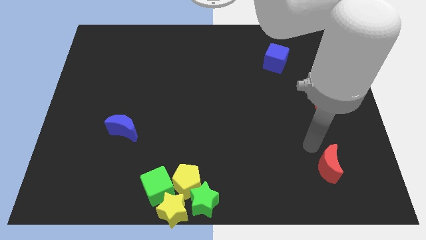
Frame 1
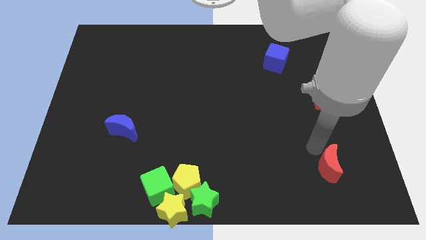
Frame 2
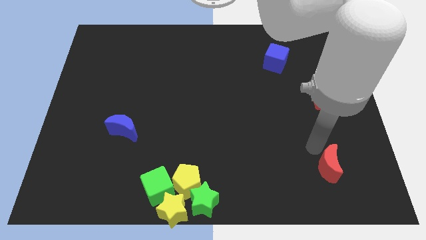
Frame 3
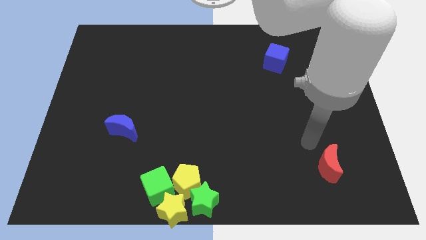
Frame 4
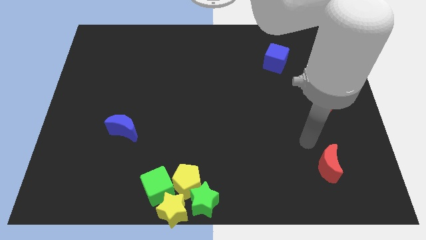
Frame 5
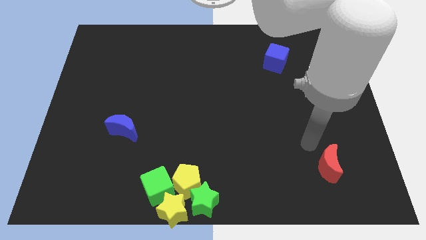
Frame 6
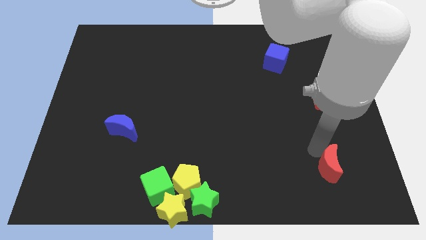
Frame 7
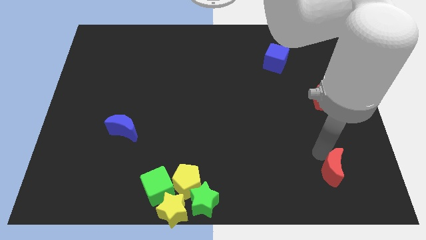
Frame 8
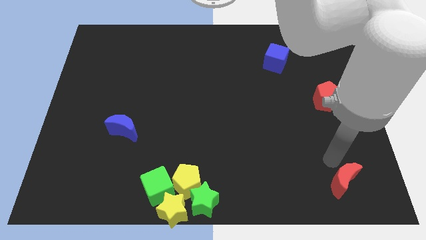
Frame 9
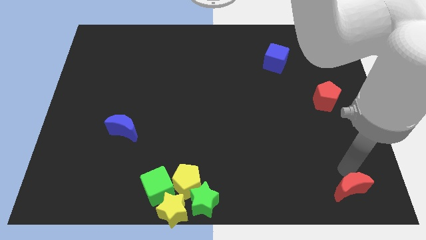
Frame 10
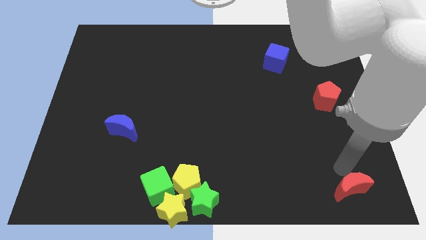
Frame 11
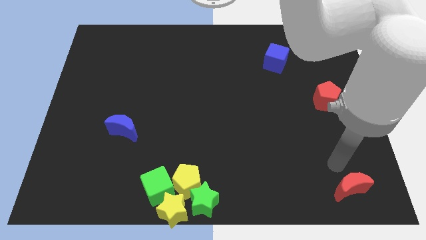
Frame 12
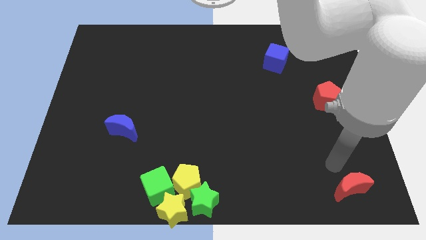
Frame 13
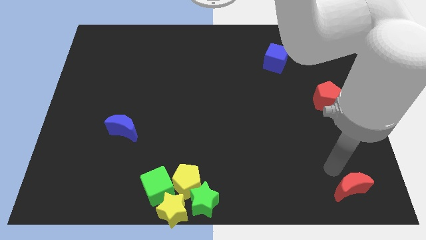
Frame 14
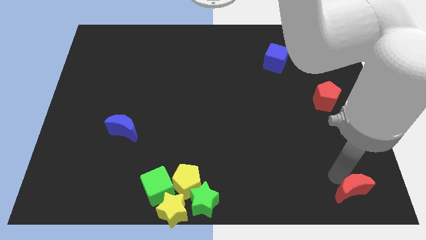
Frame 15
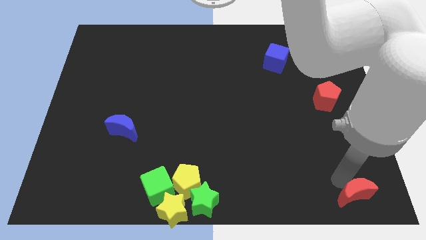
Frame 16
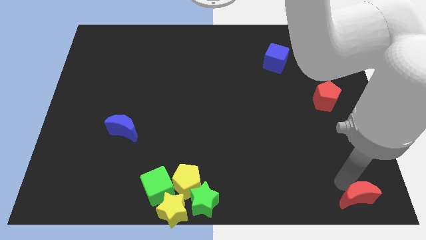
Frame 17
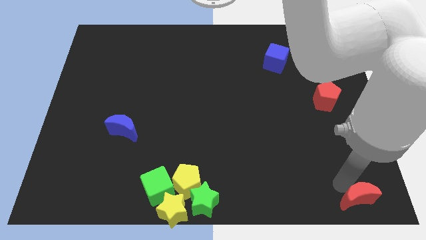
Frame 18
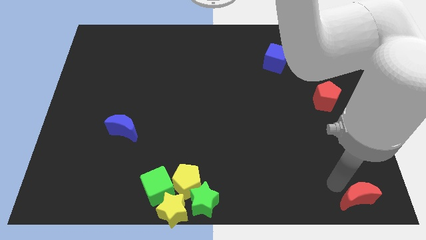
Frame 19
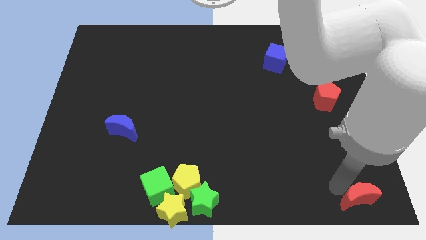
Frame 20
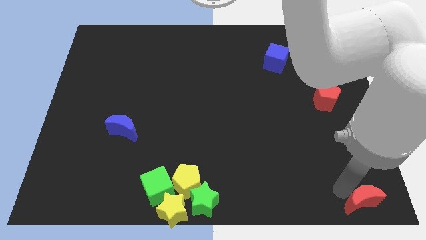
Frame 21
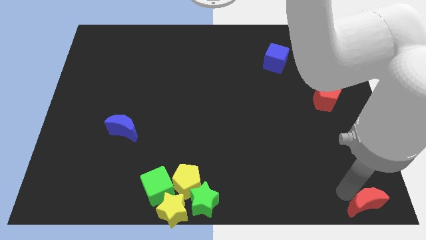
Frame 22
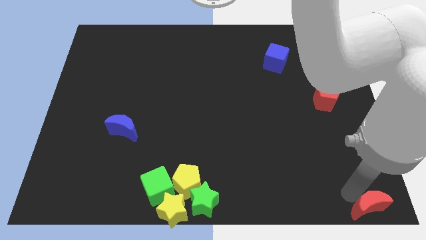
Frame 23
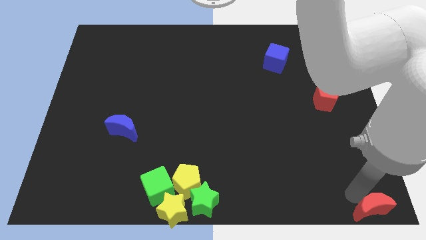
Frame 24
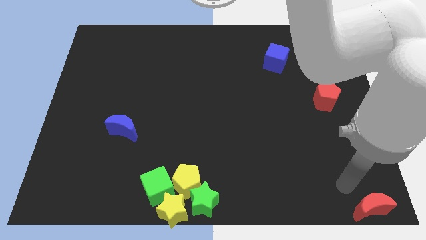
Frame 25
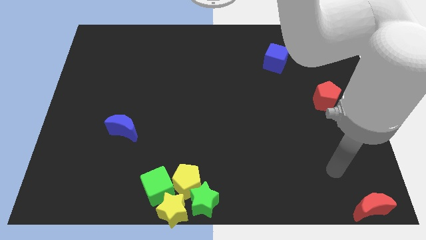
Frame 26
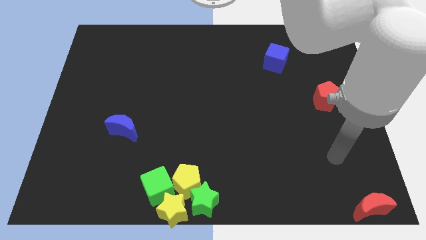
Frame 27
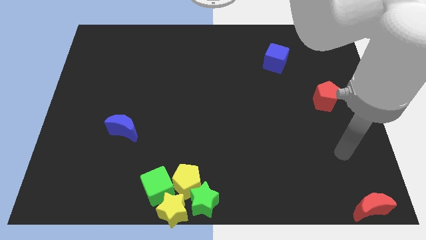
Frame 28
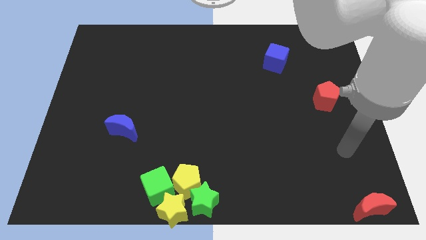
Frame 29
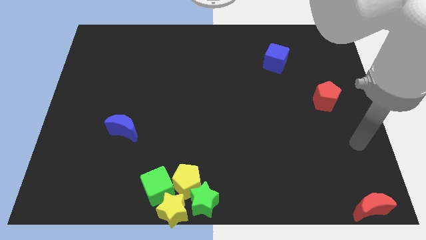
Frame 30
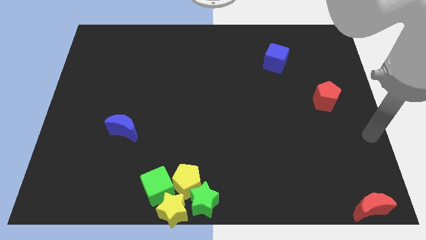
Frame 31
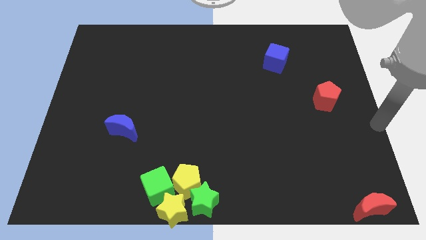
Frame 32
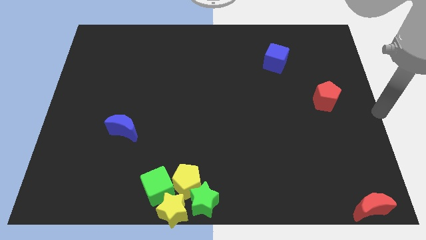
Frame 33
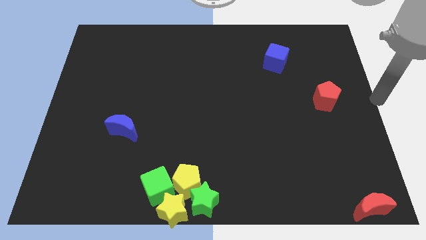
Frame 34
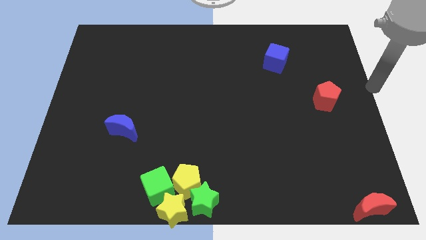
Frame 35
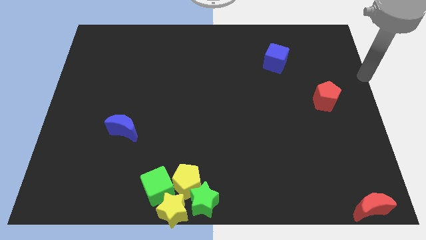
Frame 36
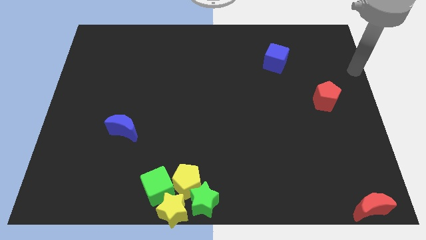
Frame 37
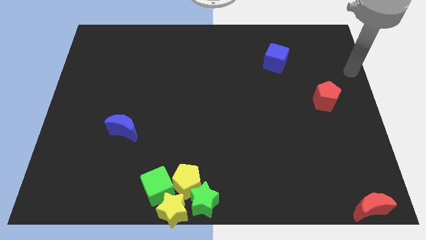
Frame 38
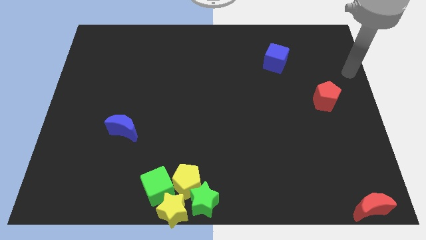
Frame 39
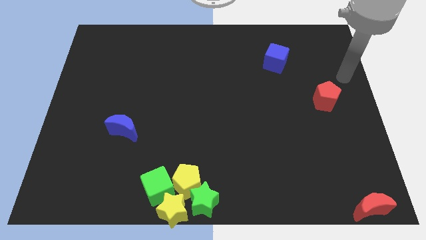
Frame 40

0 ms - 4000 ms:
push the red moon to the bottom right

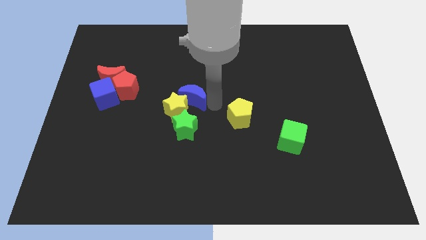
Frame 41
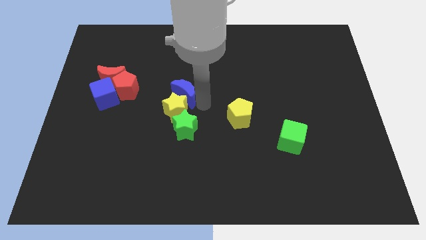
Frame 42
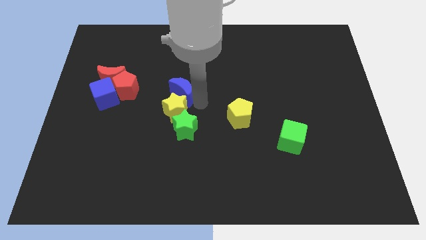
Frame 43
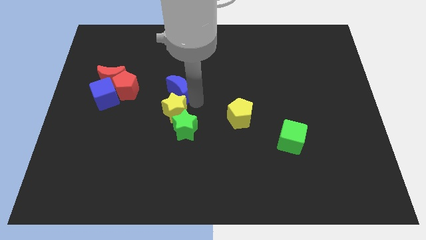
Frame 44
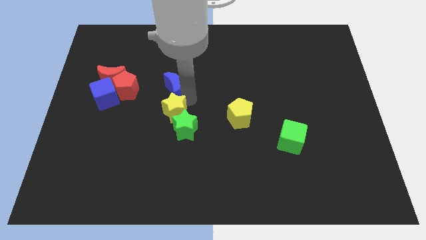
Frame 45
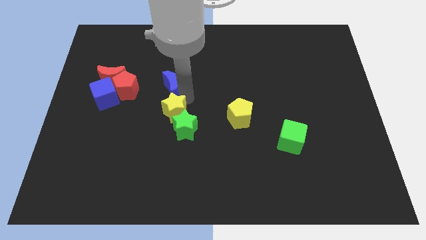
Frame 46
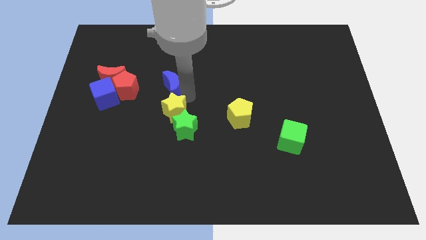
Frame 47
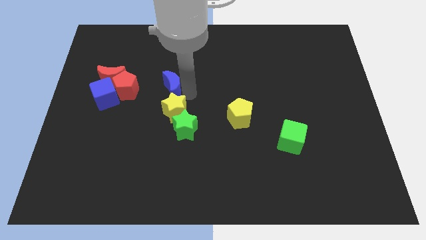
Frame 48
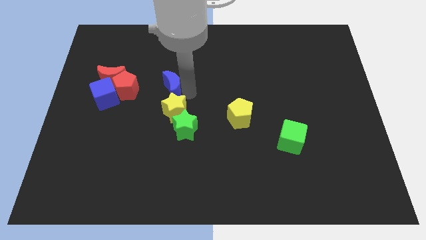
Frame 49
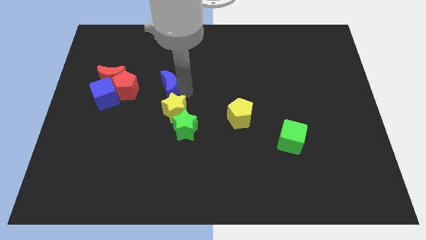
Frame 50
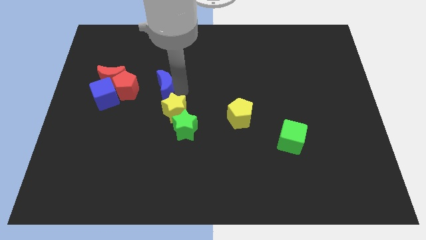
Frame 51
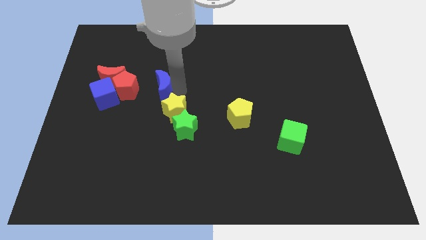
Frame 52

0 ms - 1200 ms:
slightly move the blue crescent towards red blocks

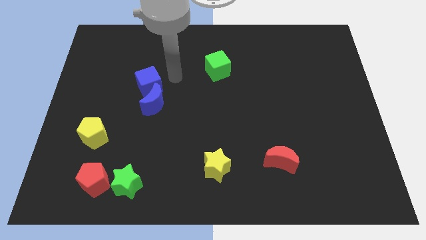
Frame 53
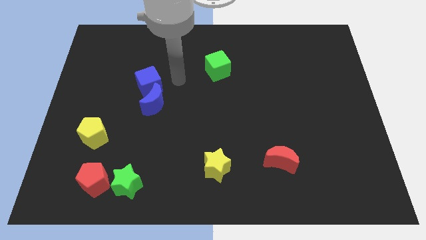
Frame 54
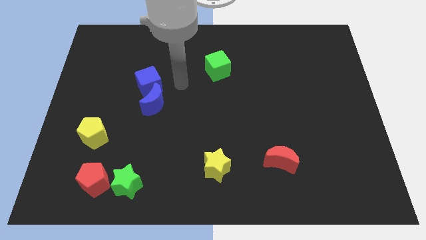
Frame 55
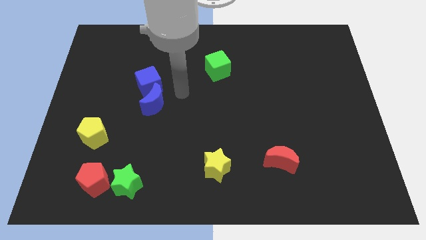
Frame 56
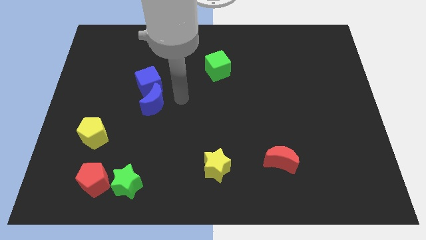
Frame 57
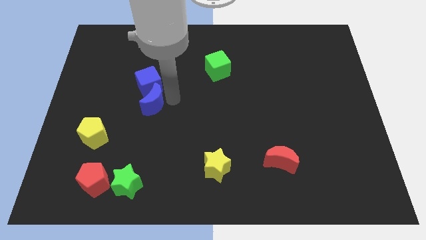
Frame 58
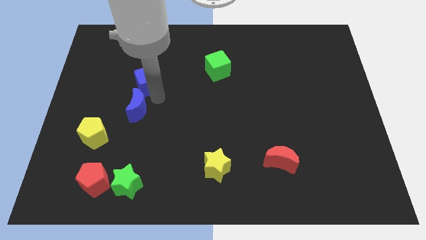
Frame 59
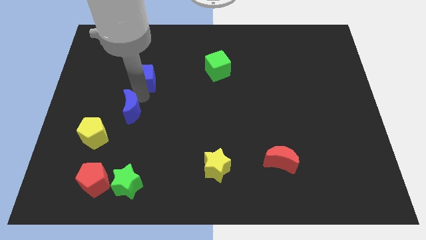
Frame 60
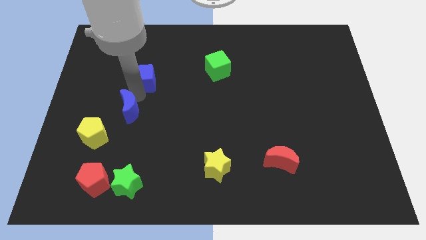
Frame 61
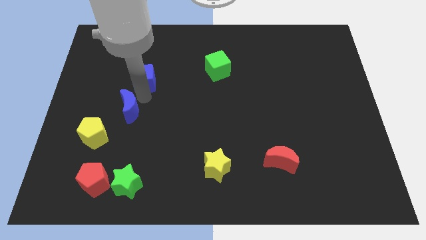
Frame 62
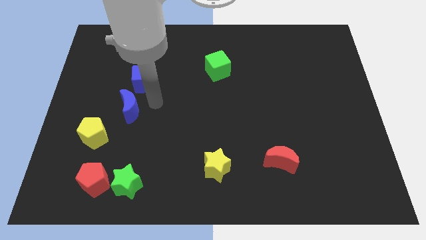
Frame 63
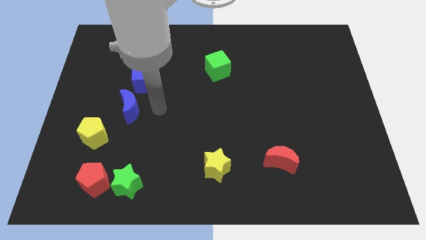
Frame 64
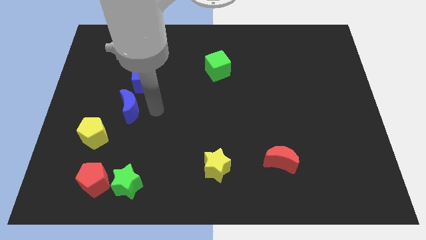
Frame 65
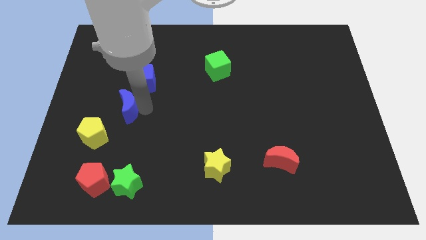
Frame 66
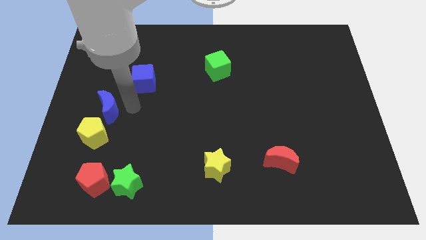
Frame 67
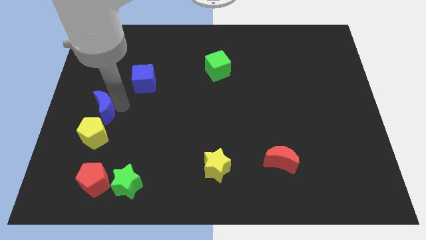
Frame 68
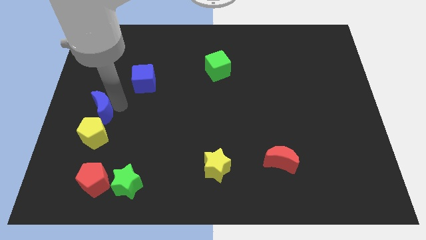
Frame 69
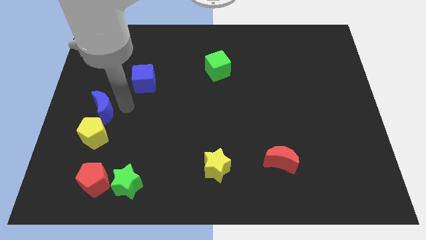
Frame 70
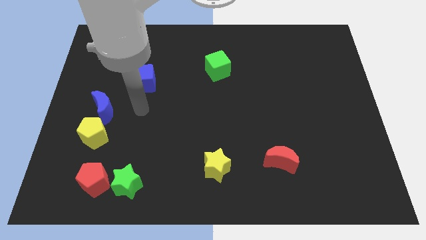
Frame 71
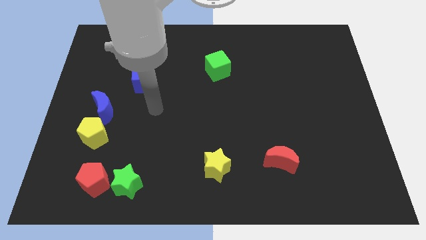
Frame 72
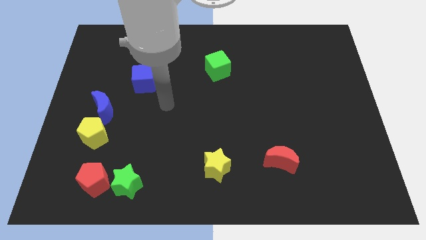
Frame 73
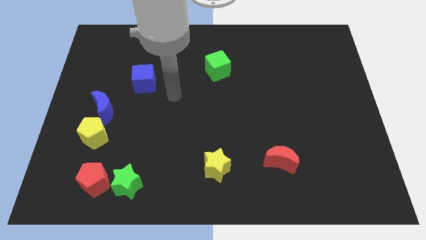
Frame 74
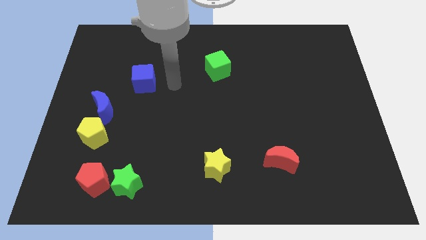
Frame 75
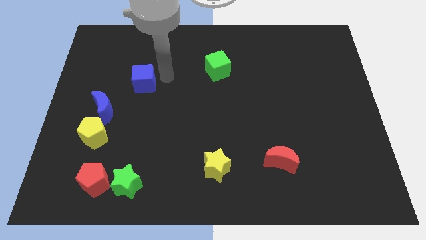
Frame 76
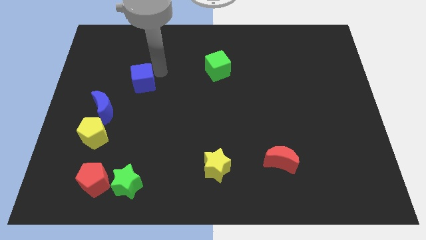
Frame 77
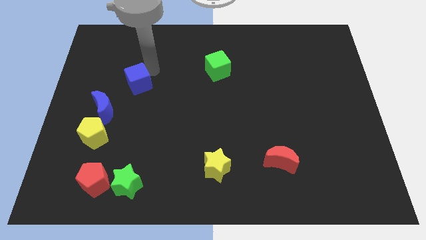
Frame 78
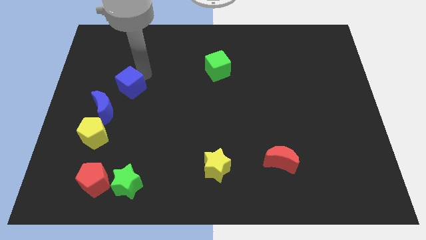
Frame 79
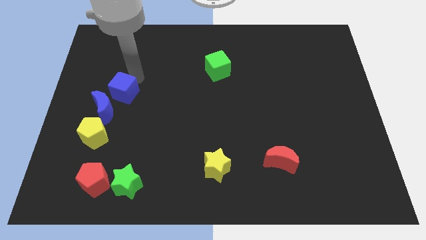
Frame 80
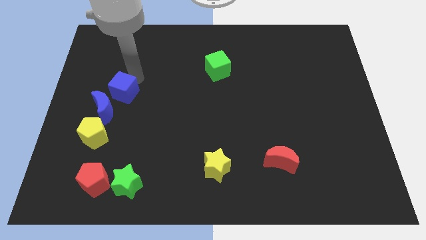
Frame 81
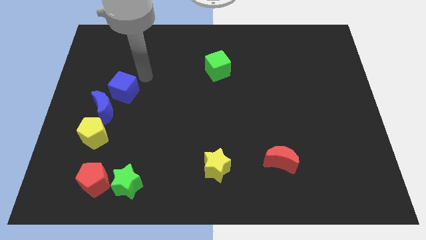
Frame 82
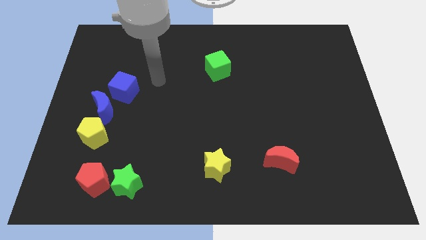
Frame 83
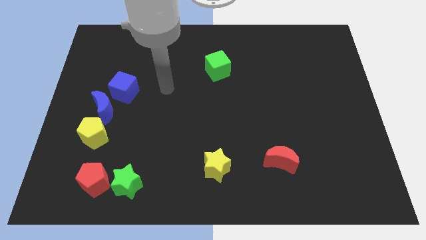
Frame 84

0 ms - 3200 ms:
move the blue cube and blue crescent towards bottom left

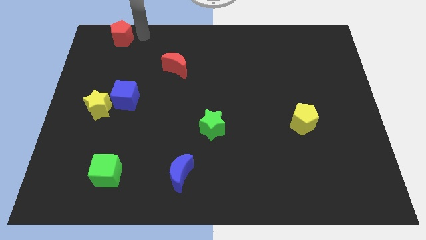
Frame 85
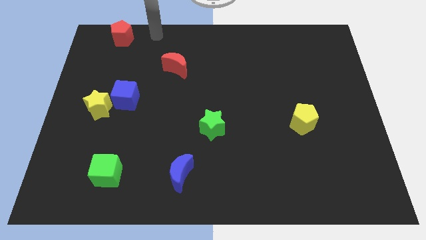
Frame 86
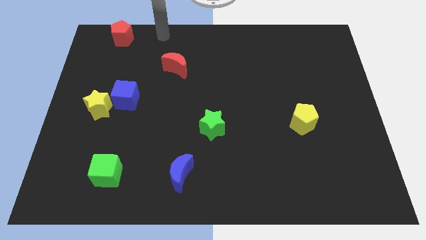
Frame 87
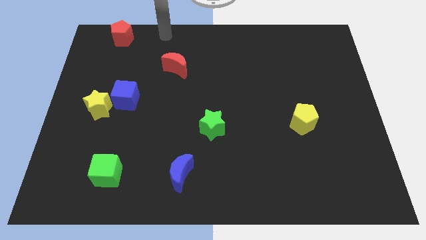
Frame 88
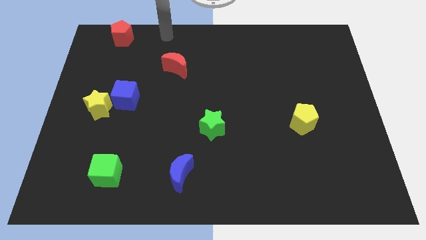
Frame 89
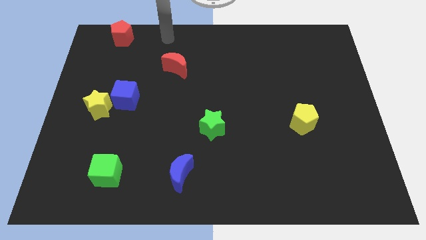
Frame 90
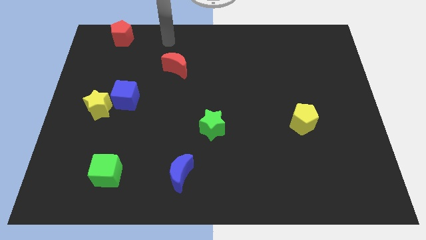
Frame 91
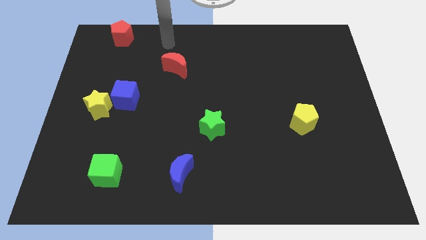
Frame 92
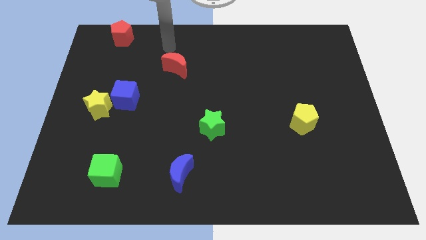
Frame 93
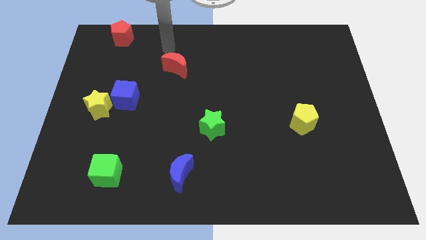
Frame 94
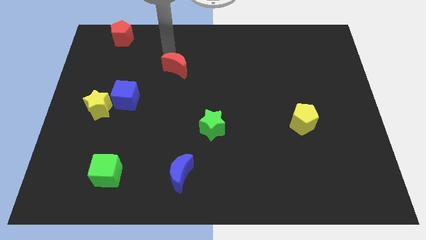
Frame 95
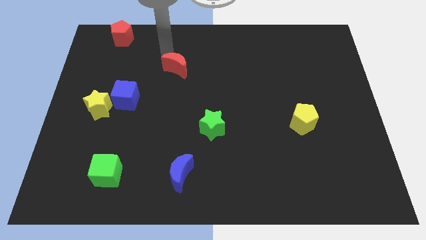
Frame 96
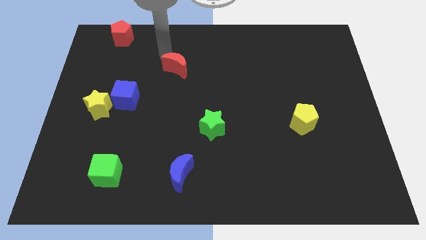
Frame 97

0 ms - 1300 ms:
move your arm away from the red pentagon
